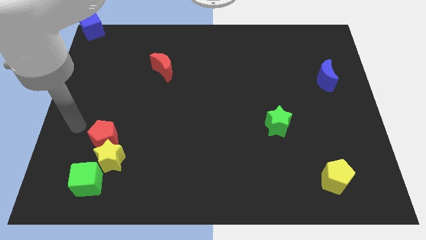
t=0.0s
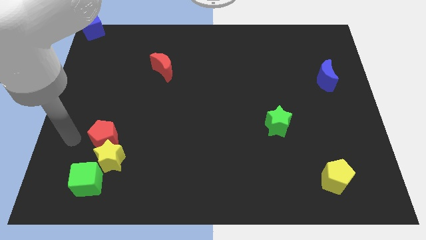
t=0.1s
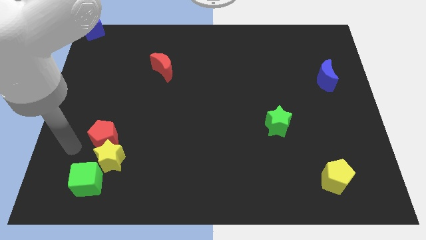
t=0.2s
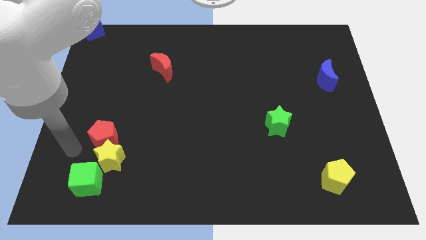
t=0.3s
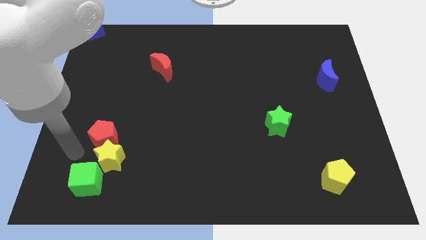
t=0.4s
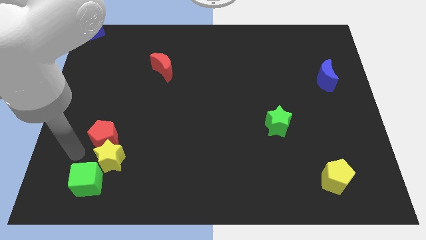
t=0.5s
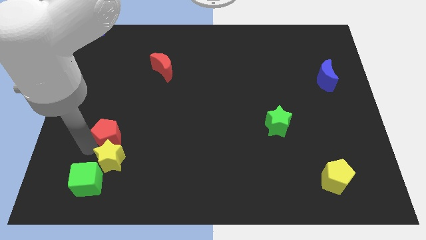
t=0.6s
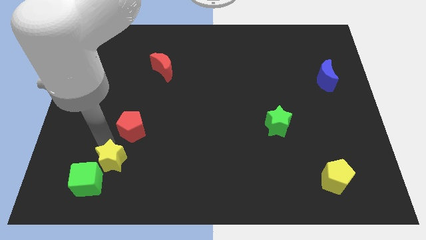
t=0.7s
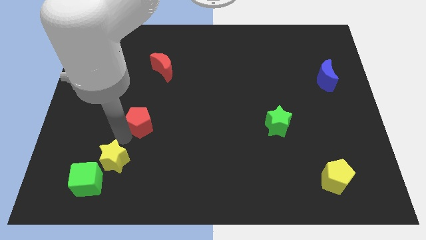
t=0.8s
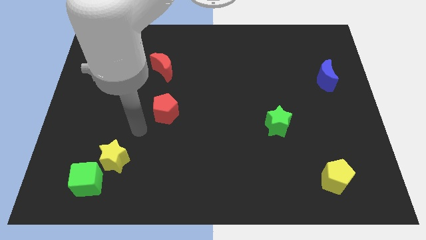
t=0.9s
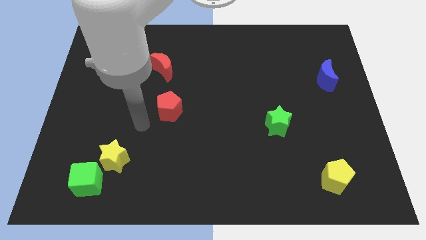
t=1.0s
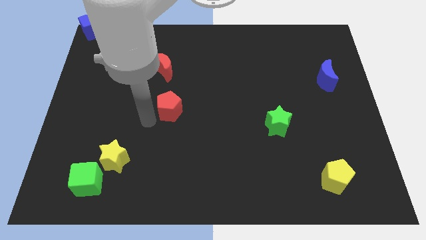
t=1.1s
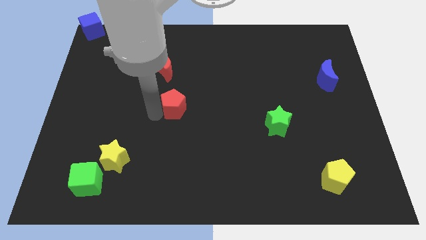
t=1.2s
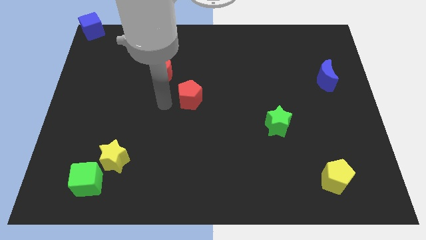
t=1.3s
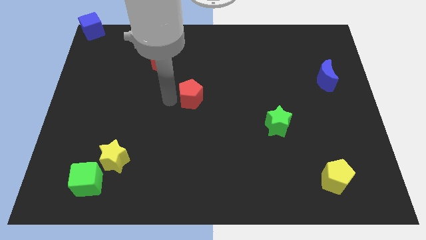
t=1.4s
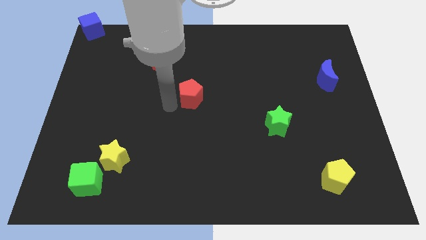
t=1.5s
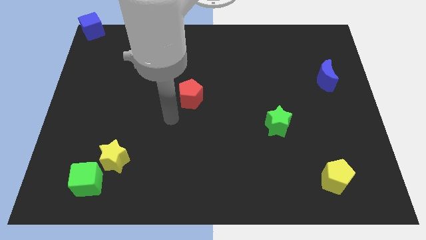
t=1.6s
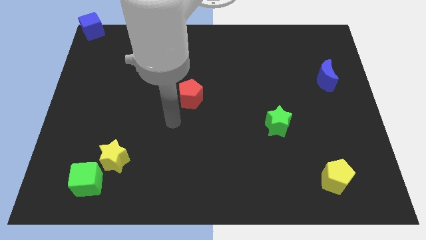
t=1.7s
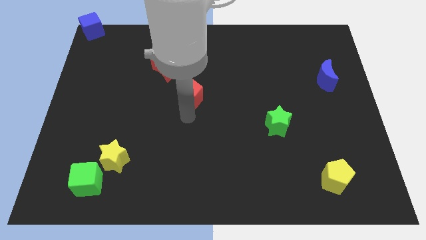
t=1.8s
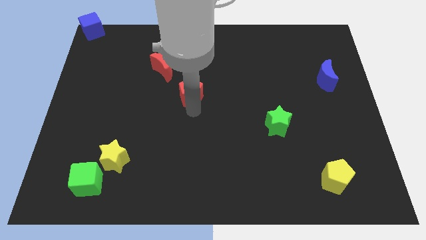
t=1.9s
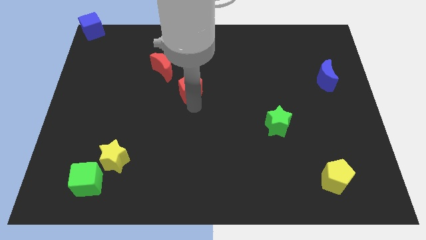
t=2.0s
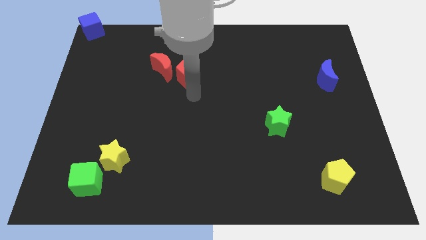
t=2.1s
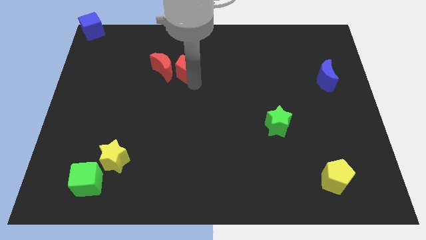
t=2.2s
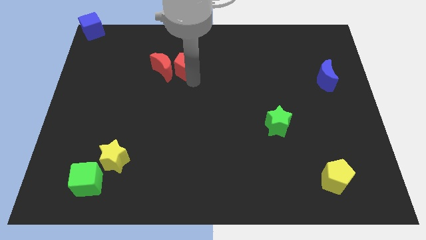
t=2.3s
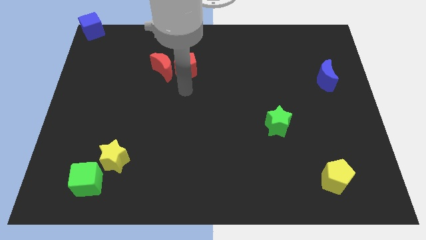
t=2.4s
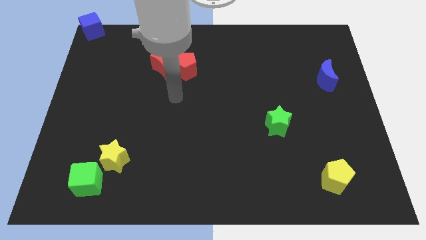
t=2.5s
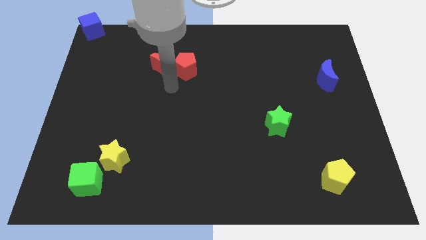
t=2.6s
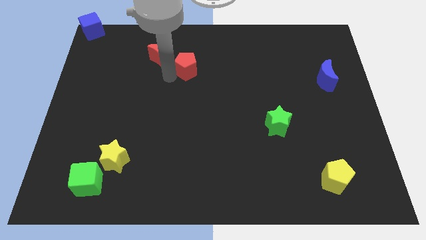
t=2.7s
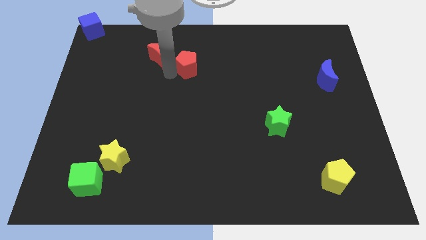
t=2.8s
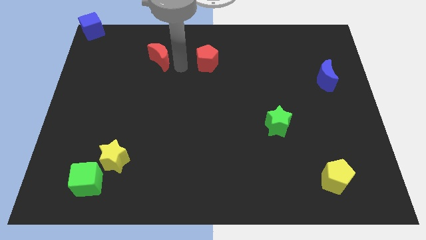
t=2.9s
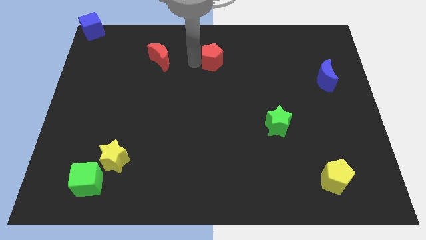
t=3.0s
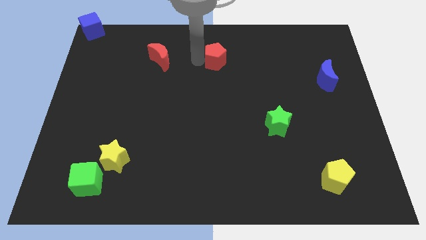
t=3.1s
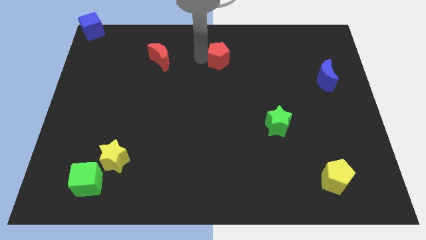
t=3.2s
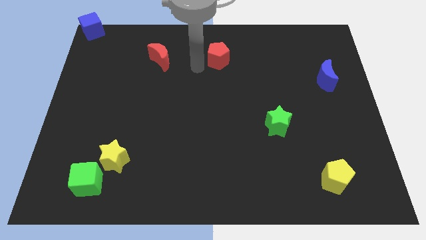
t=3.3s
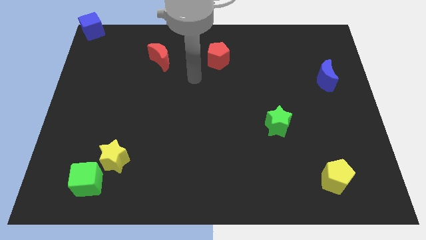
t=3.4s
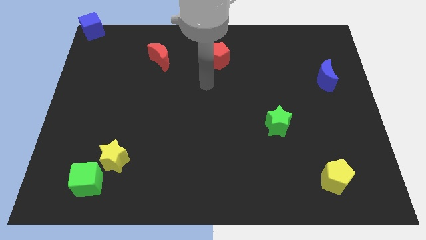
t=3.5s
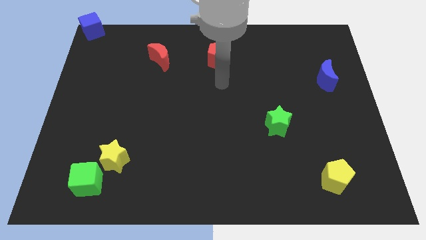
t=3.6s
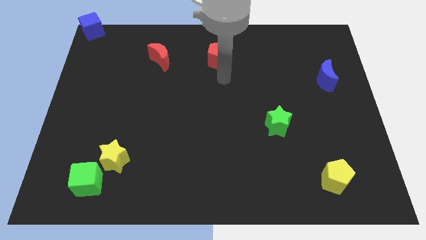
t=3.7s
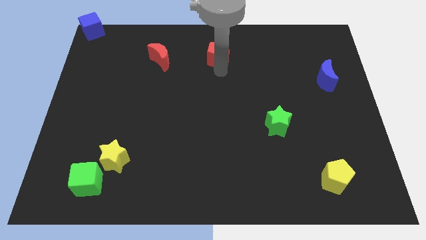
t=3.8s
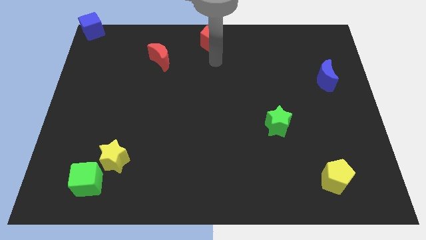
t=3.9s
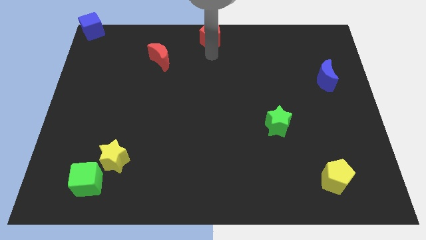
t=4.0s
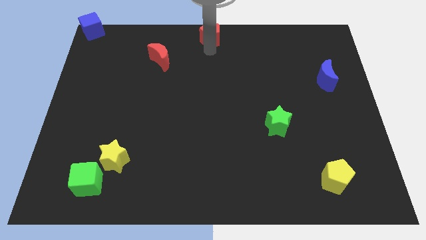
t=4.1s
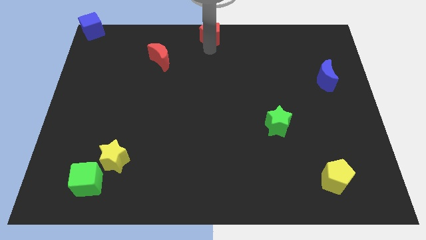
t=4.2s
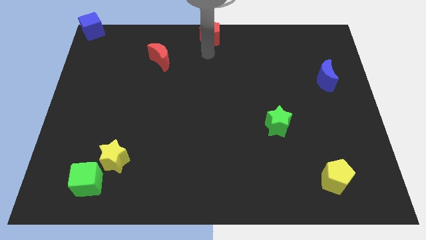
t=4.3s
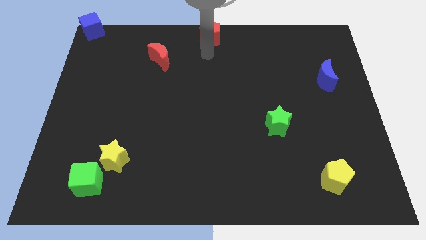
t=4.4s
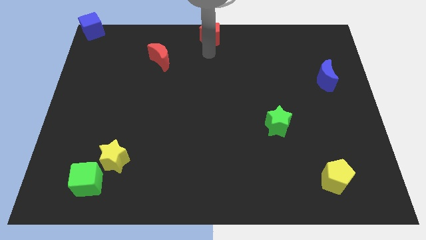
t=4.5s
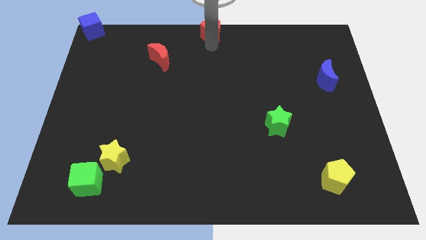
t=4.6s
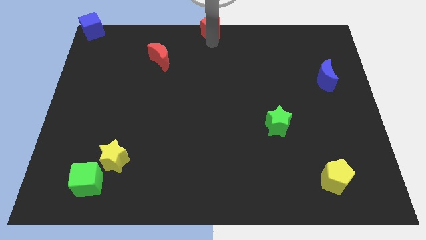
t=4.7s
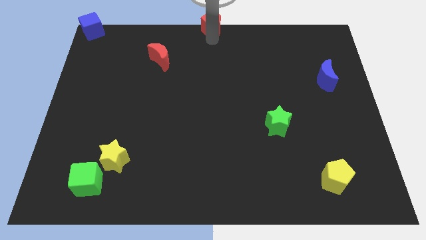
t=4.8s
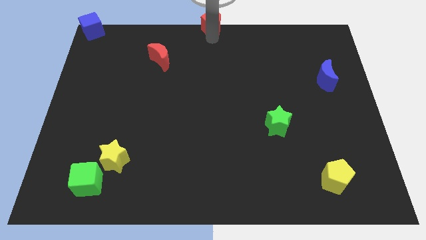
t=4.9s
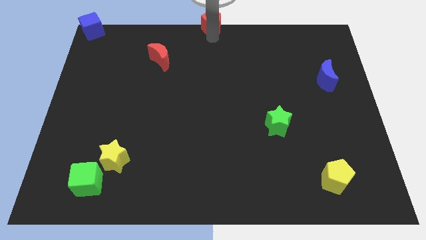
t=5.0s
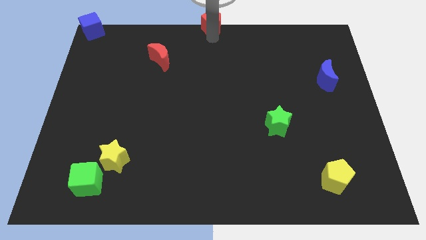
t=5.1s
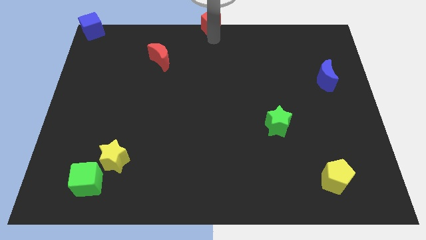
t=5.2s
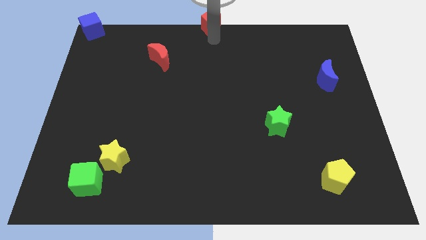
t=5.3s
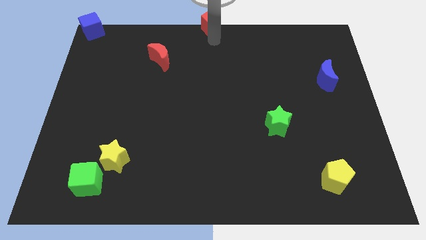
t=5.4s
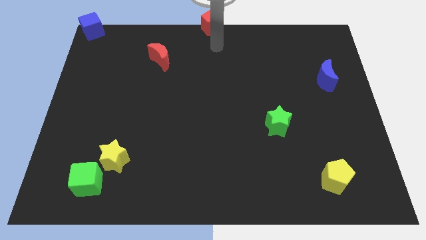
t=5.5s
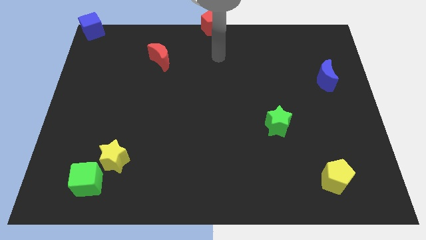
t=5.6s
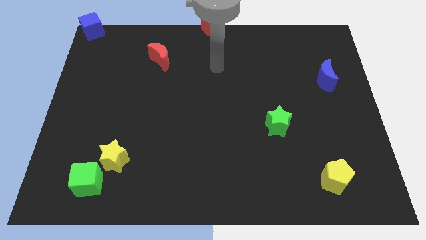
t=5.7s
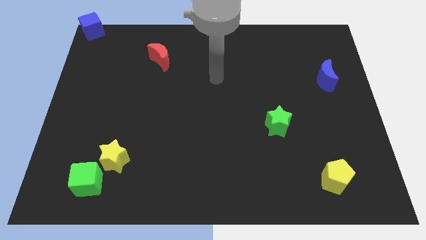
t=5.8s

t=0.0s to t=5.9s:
push the red pentagon to the top center of the board

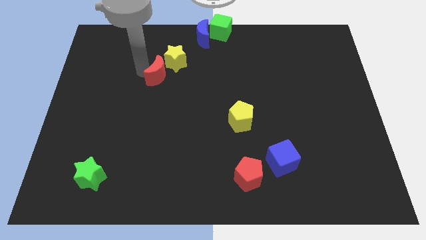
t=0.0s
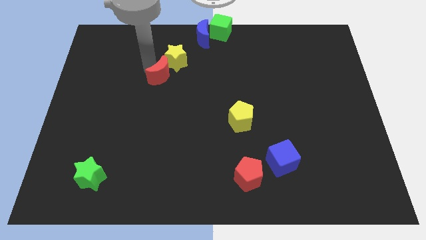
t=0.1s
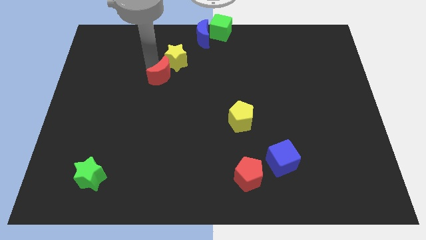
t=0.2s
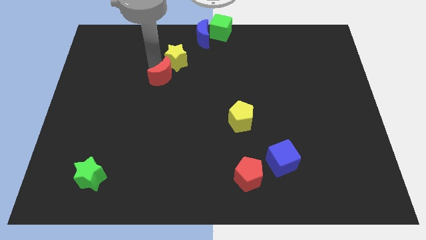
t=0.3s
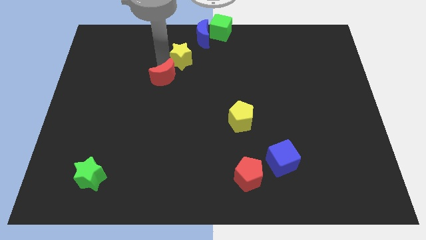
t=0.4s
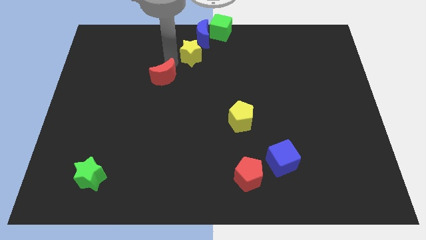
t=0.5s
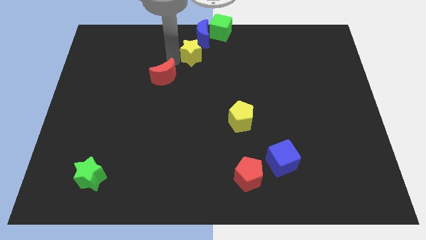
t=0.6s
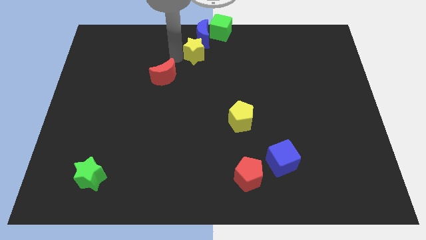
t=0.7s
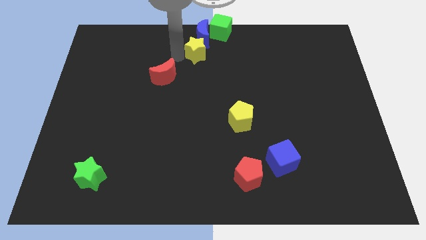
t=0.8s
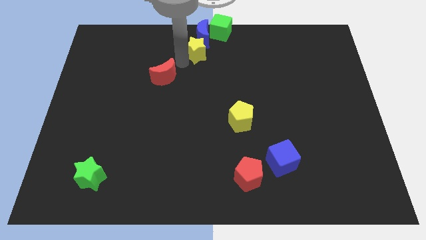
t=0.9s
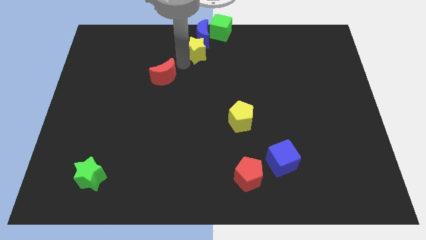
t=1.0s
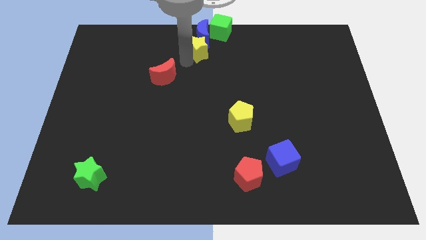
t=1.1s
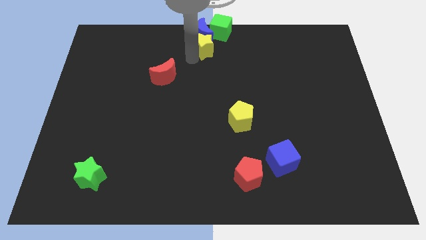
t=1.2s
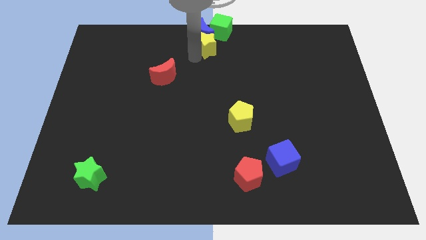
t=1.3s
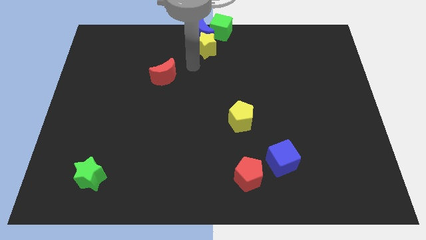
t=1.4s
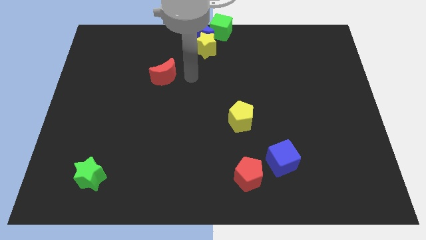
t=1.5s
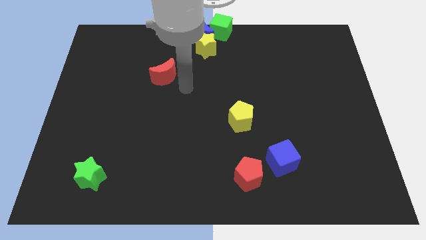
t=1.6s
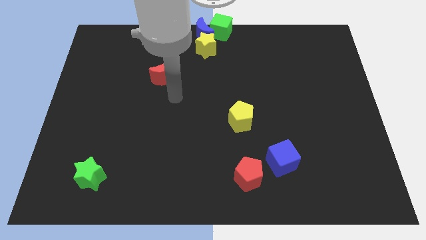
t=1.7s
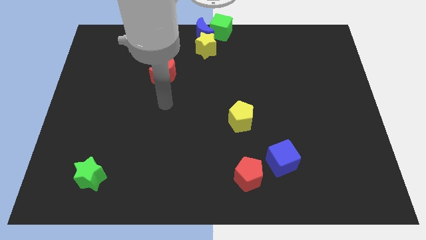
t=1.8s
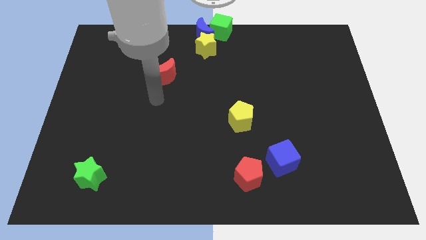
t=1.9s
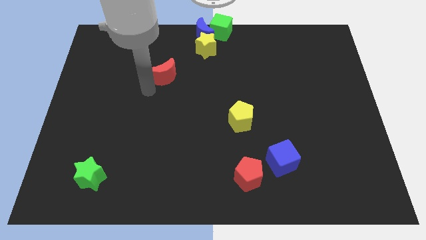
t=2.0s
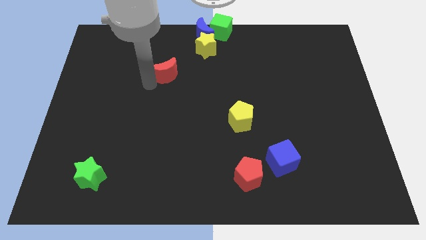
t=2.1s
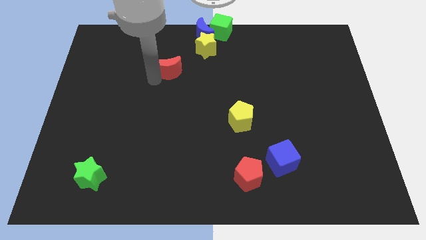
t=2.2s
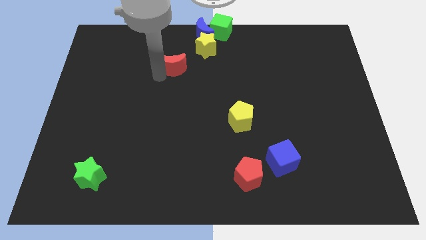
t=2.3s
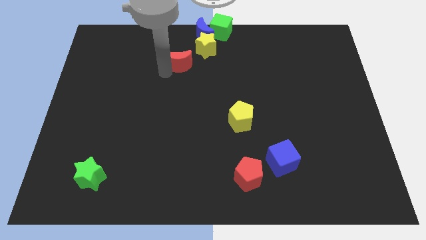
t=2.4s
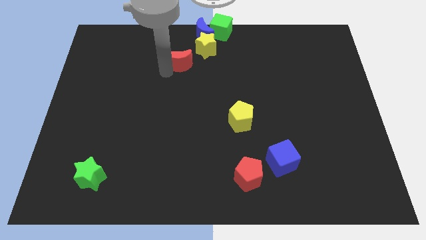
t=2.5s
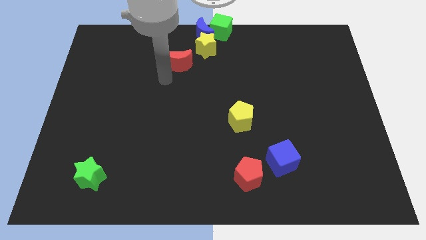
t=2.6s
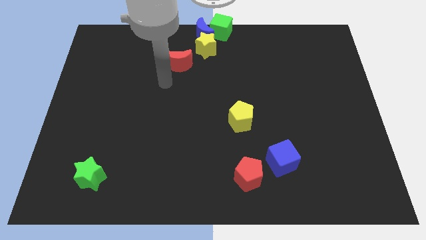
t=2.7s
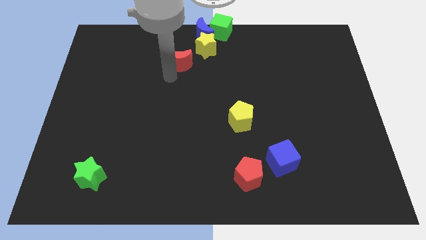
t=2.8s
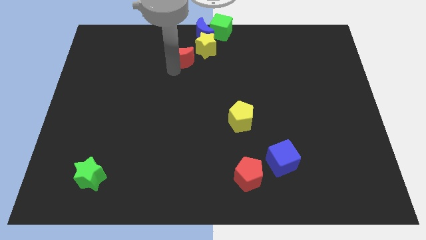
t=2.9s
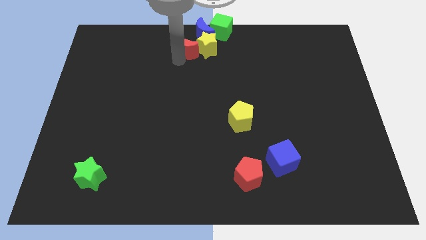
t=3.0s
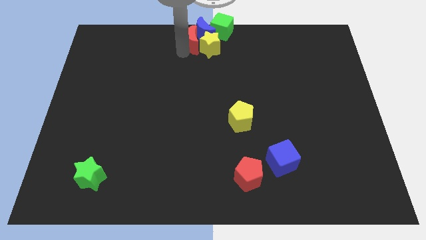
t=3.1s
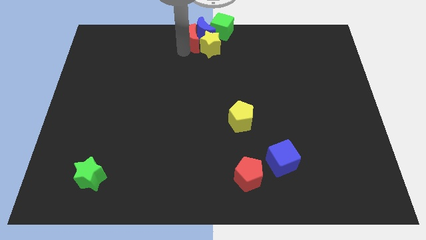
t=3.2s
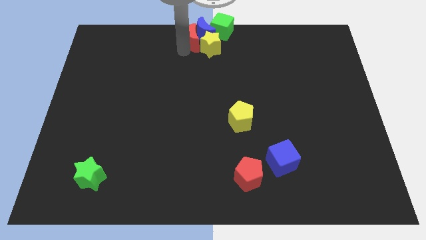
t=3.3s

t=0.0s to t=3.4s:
push the red crescent into the blue crescent
